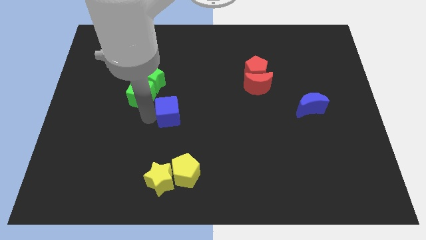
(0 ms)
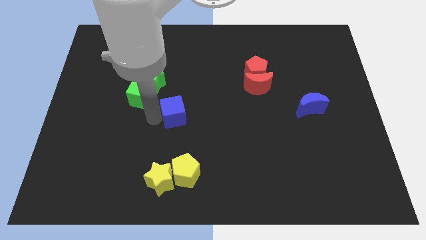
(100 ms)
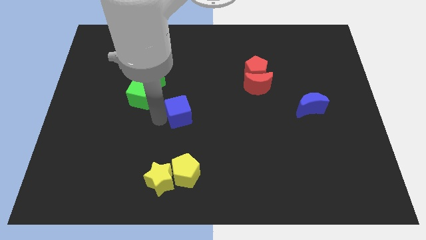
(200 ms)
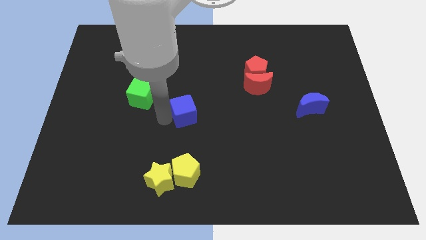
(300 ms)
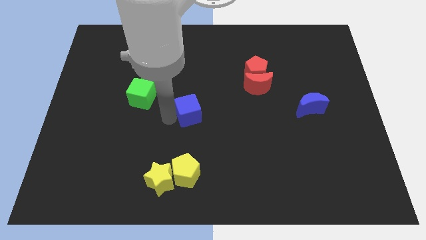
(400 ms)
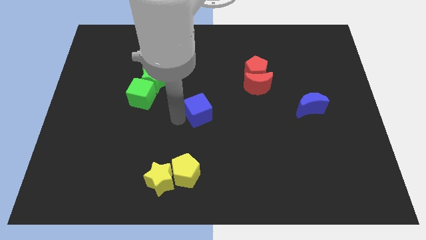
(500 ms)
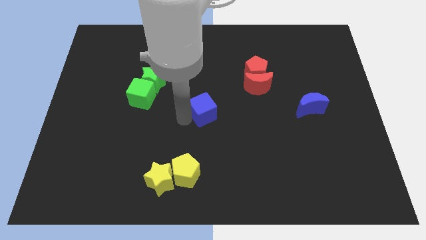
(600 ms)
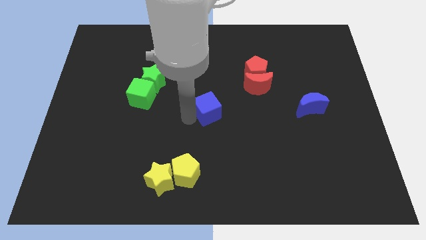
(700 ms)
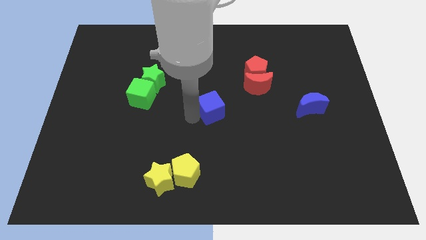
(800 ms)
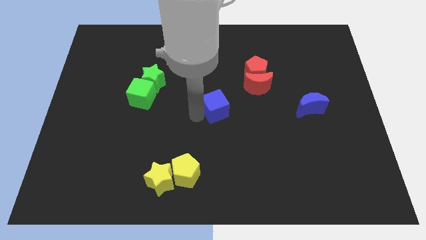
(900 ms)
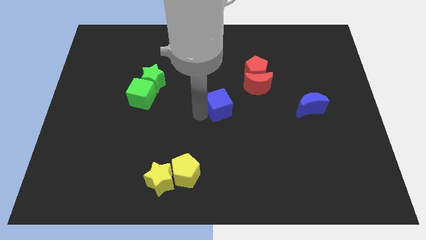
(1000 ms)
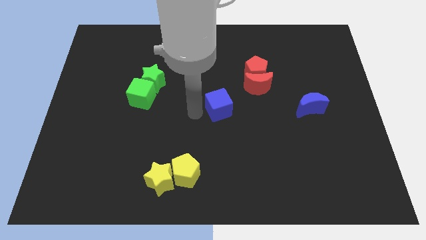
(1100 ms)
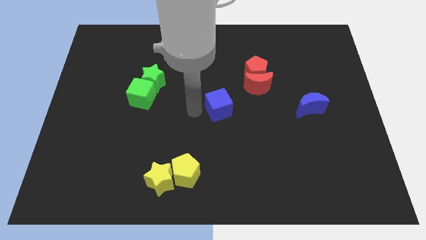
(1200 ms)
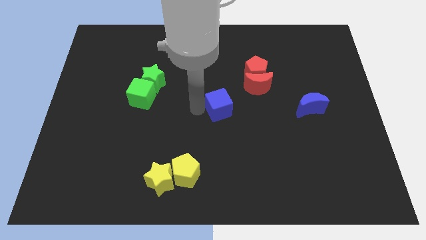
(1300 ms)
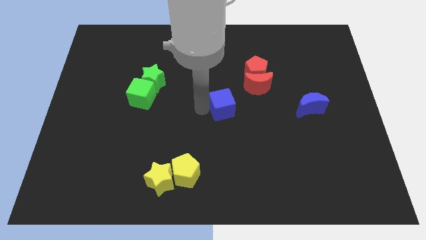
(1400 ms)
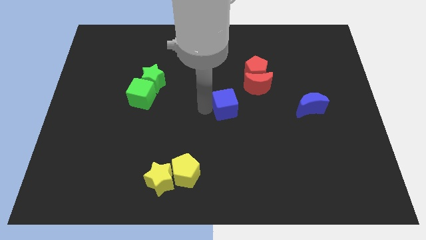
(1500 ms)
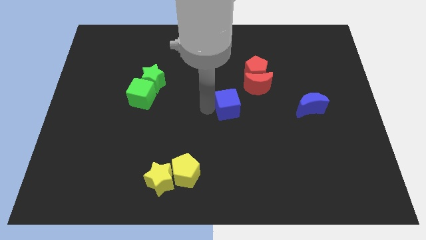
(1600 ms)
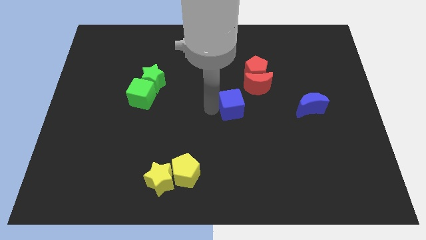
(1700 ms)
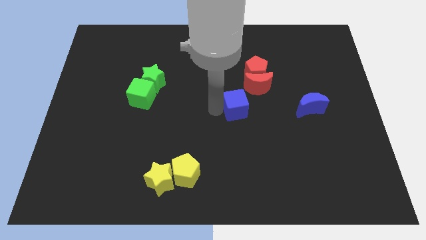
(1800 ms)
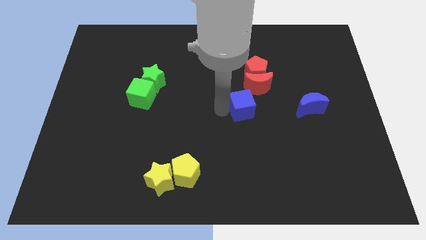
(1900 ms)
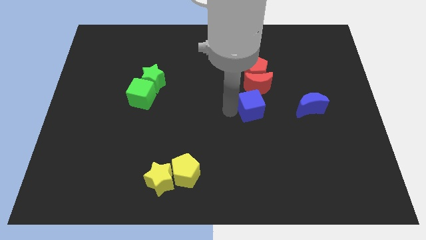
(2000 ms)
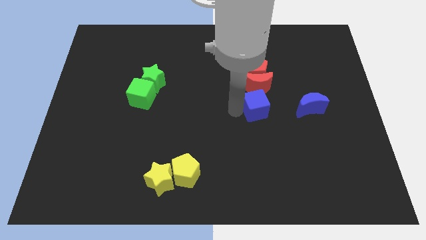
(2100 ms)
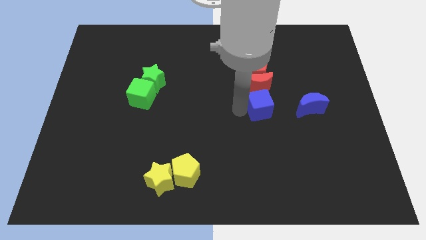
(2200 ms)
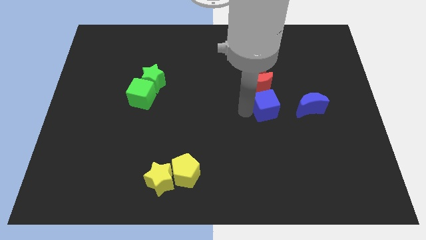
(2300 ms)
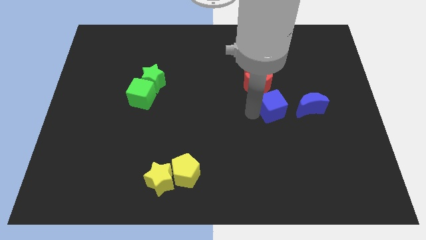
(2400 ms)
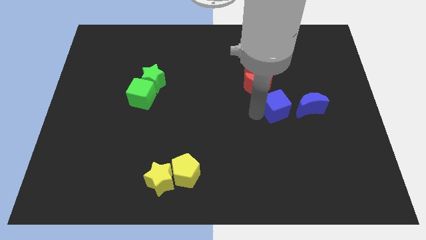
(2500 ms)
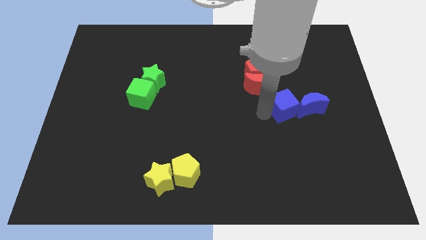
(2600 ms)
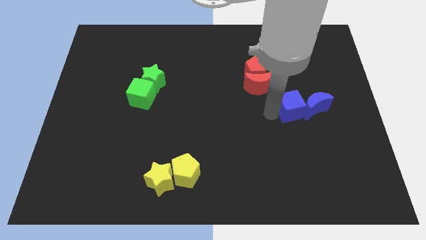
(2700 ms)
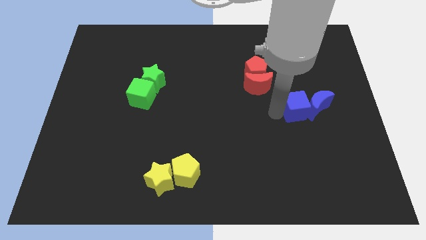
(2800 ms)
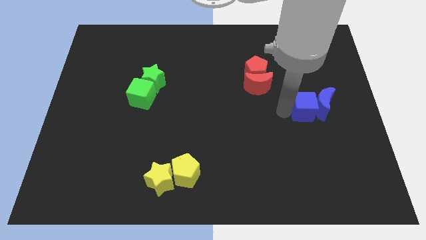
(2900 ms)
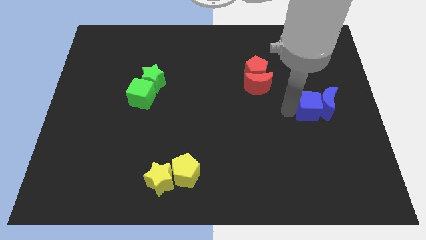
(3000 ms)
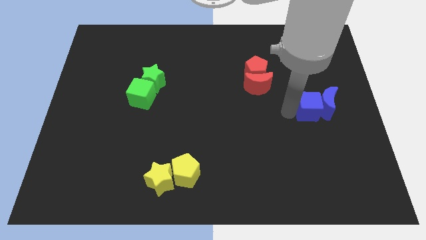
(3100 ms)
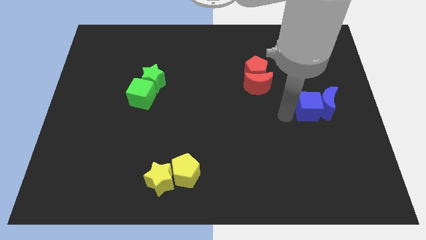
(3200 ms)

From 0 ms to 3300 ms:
move the blue cube into the blue moon

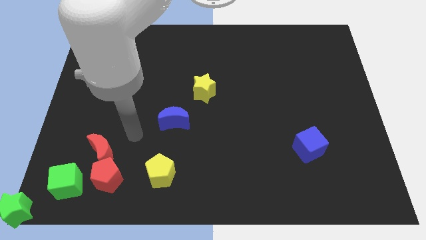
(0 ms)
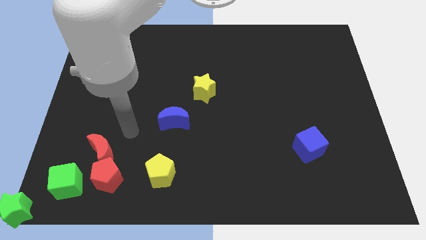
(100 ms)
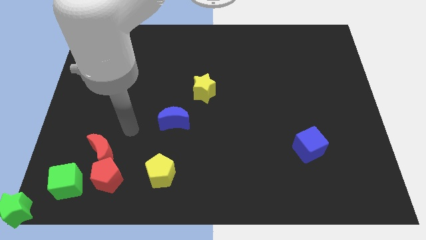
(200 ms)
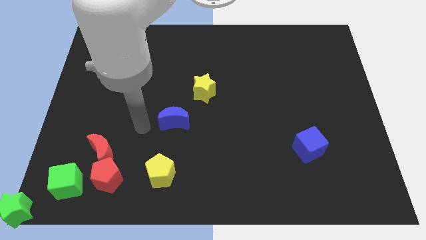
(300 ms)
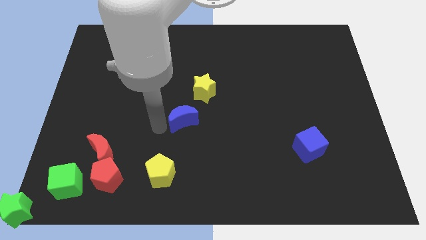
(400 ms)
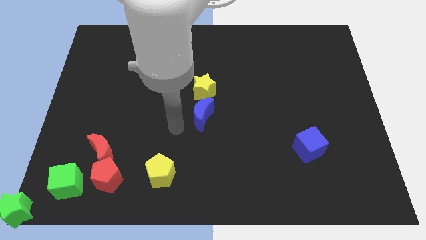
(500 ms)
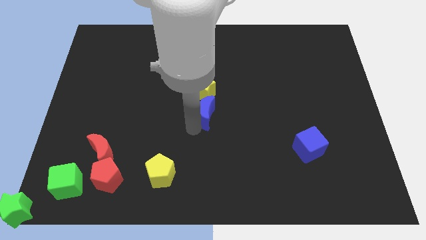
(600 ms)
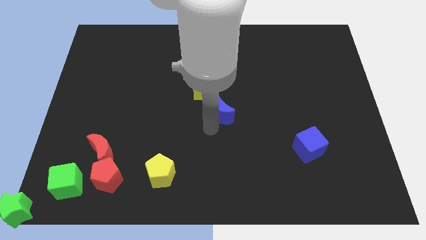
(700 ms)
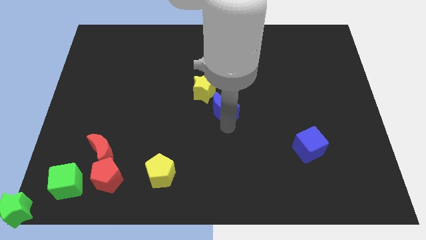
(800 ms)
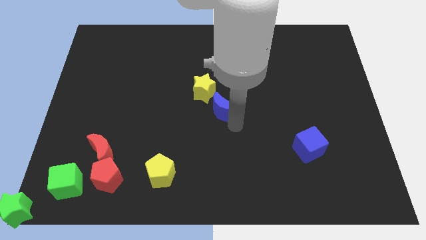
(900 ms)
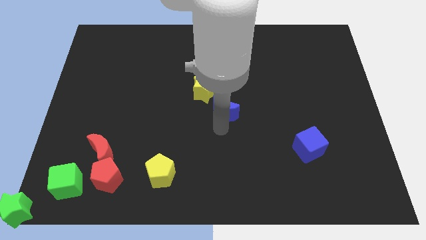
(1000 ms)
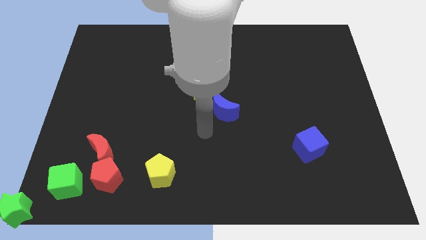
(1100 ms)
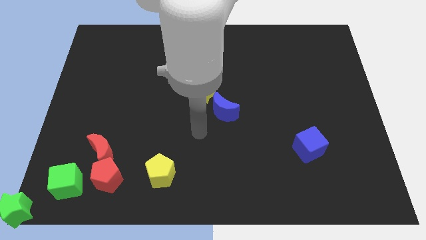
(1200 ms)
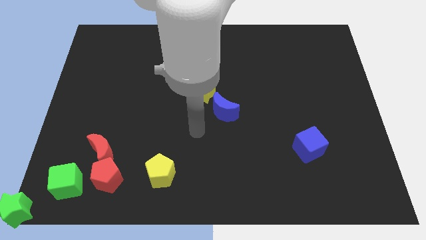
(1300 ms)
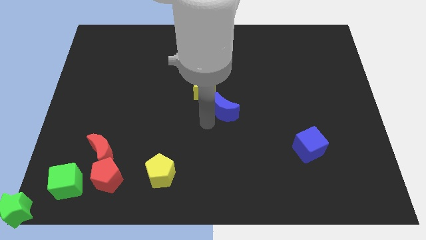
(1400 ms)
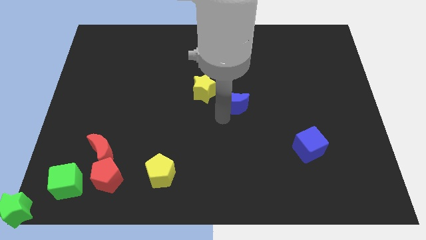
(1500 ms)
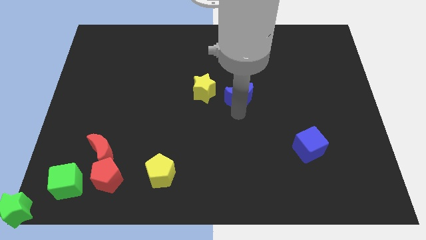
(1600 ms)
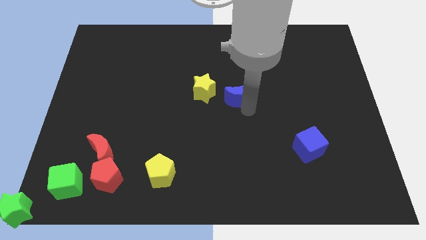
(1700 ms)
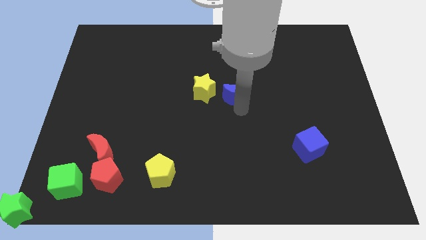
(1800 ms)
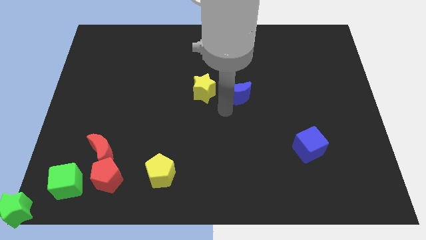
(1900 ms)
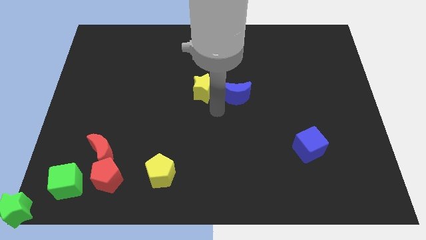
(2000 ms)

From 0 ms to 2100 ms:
place the blue moon to the right of the yellow star

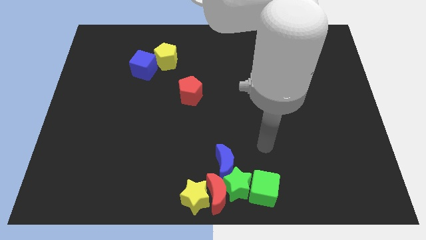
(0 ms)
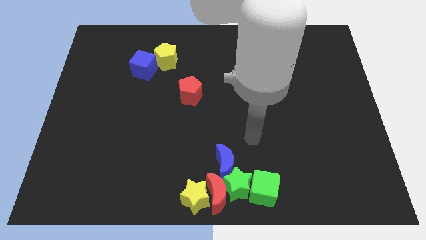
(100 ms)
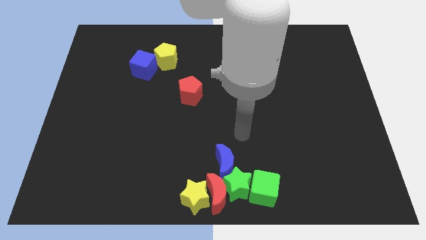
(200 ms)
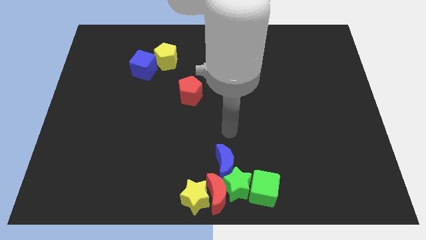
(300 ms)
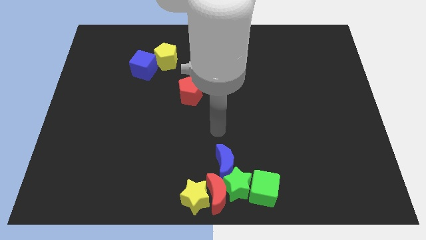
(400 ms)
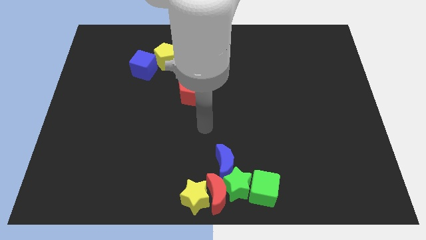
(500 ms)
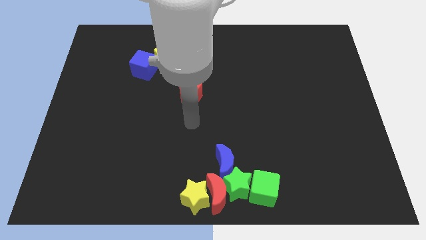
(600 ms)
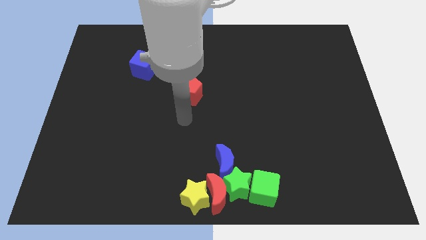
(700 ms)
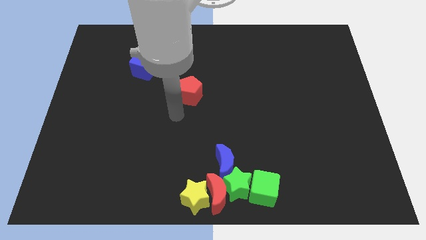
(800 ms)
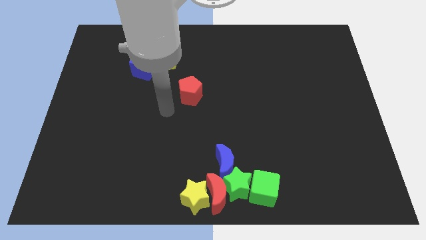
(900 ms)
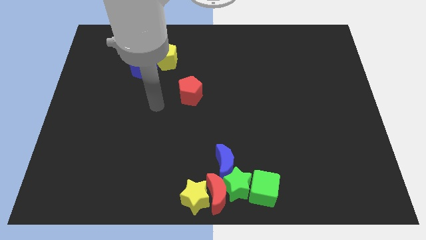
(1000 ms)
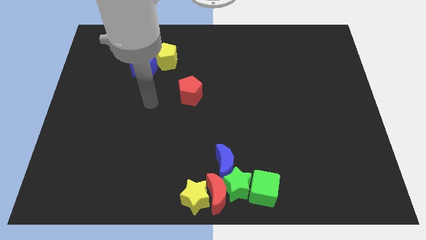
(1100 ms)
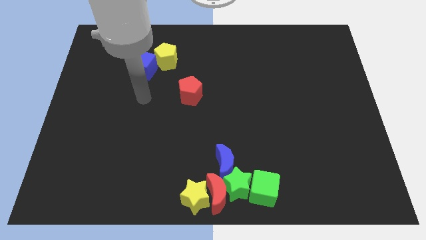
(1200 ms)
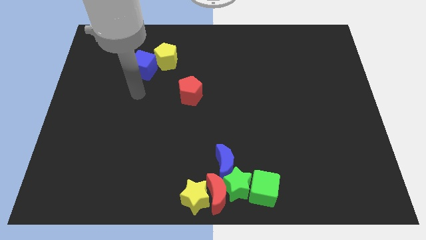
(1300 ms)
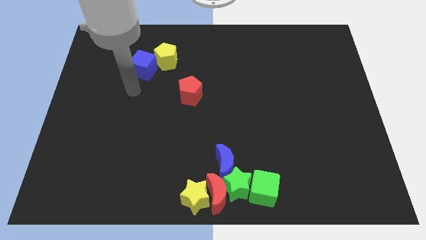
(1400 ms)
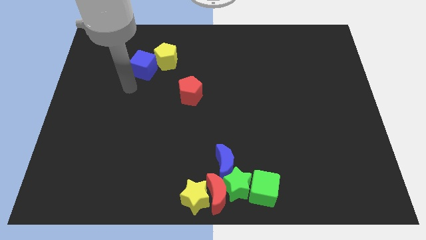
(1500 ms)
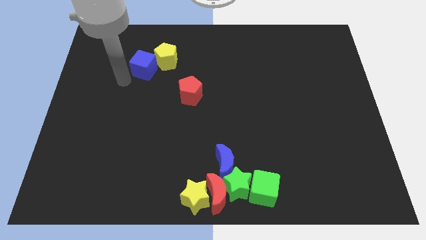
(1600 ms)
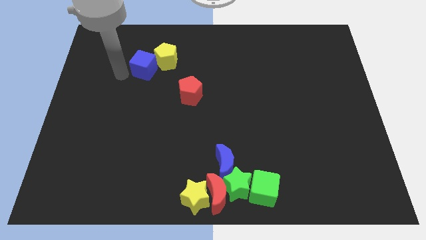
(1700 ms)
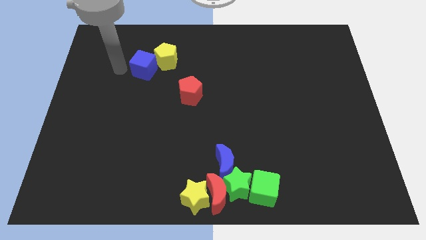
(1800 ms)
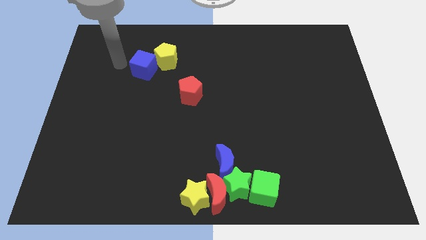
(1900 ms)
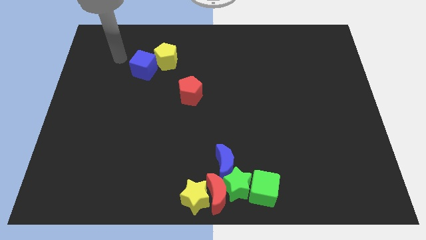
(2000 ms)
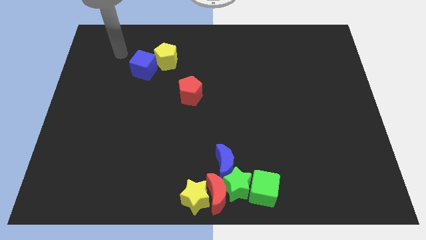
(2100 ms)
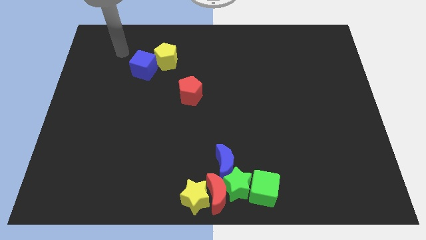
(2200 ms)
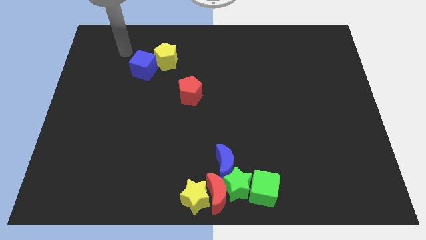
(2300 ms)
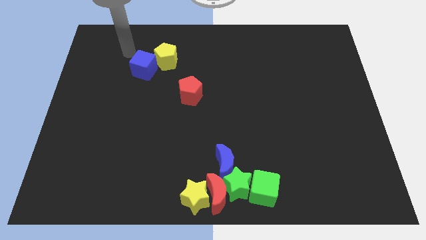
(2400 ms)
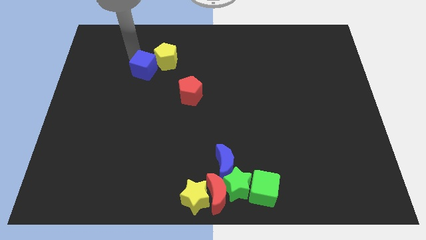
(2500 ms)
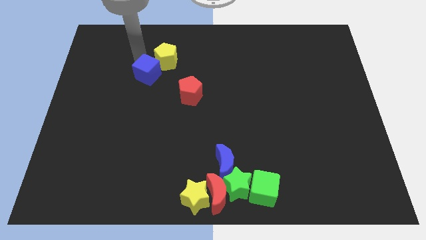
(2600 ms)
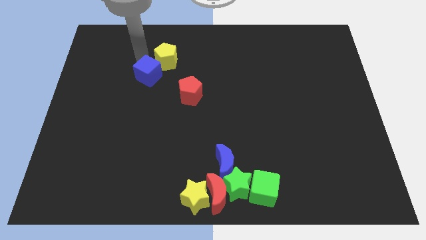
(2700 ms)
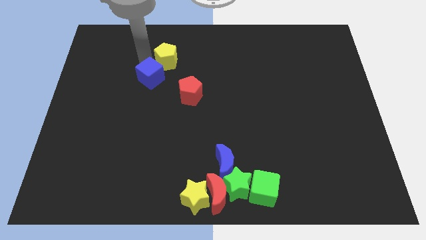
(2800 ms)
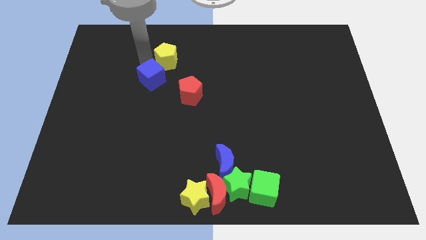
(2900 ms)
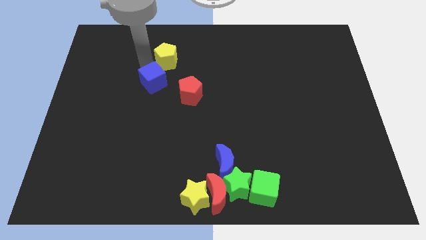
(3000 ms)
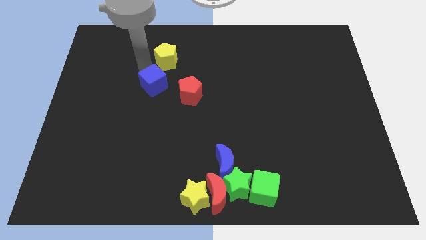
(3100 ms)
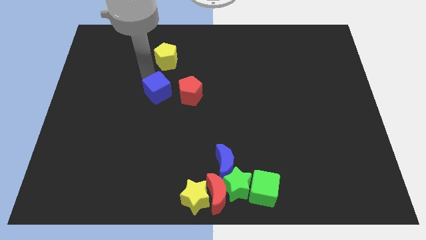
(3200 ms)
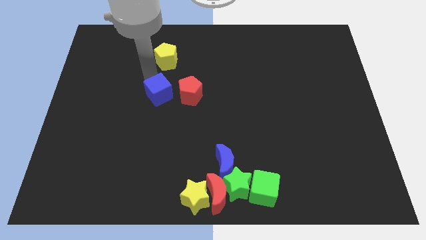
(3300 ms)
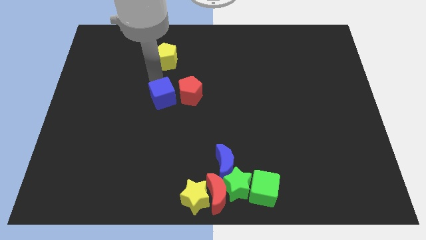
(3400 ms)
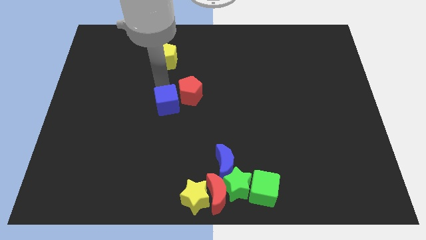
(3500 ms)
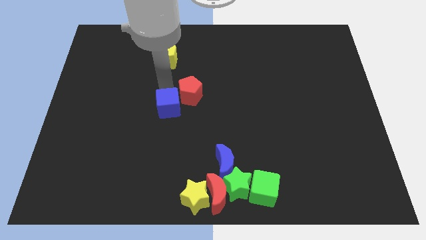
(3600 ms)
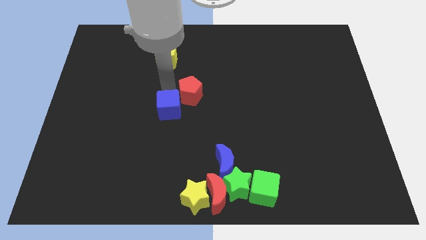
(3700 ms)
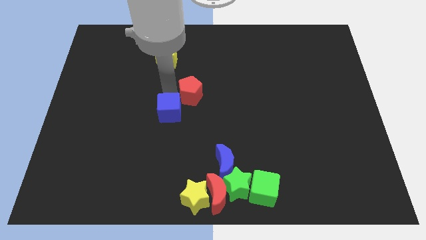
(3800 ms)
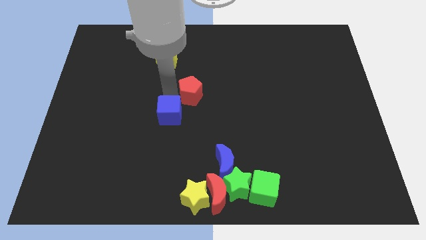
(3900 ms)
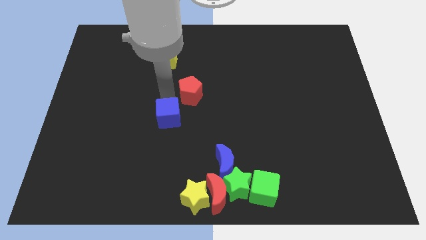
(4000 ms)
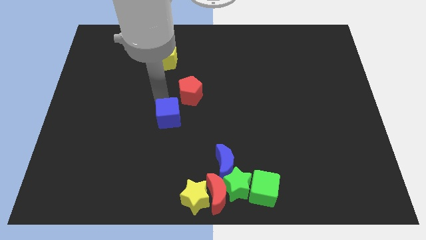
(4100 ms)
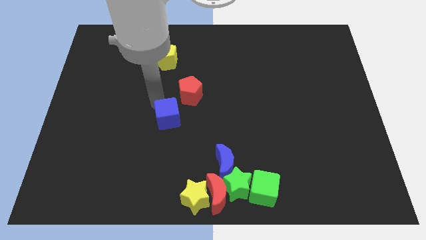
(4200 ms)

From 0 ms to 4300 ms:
move the blue cube towards the yellow pentagon
